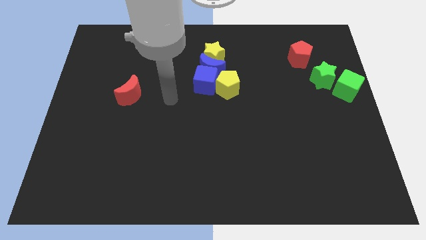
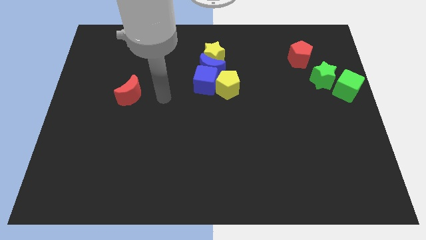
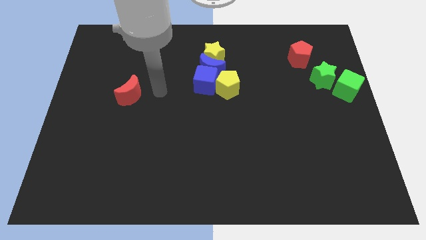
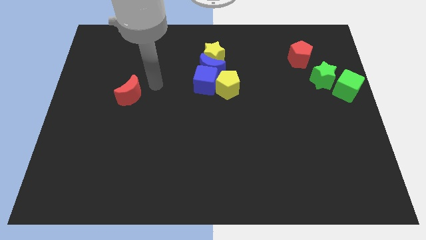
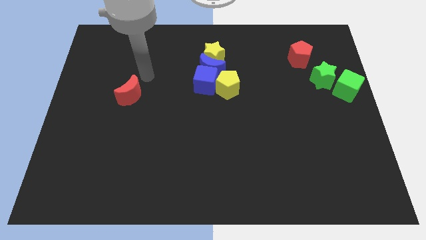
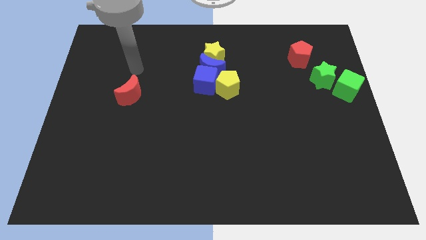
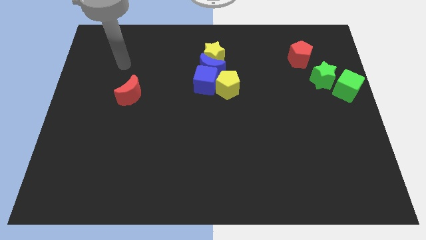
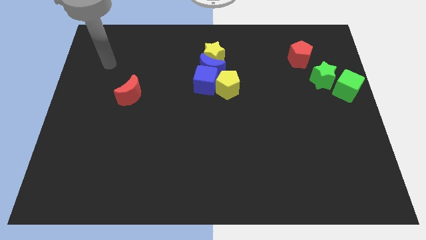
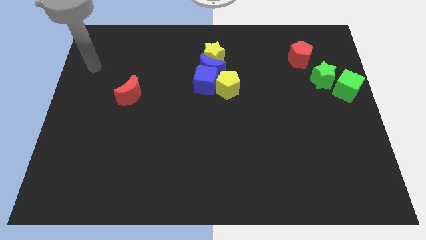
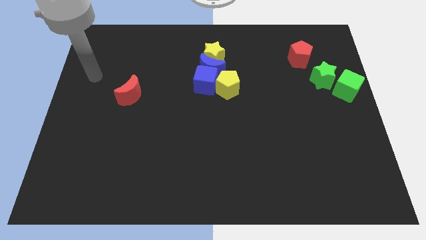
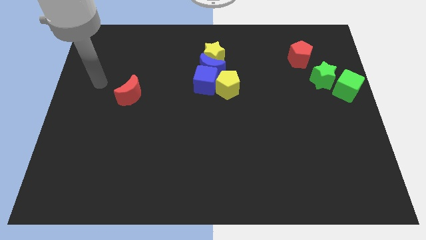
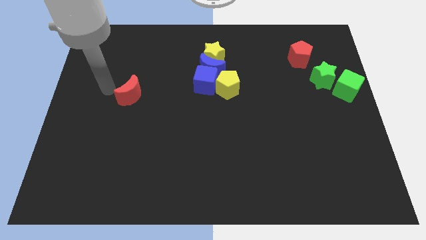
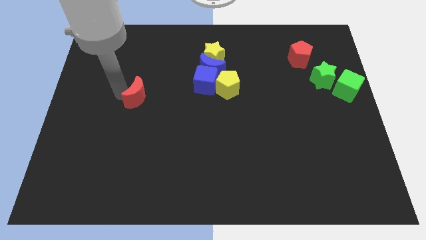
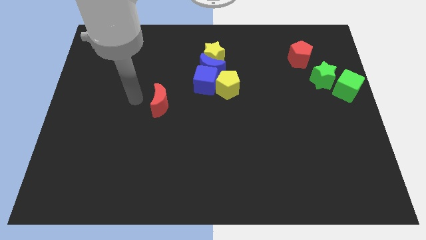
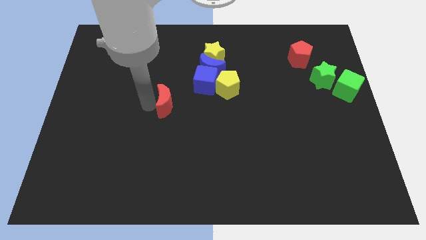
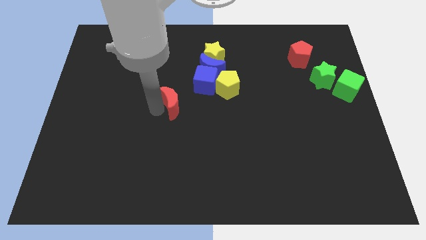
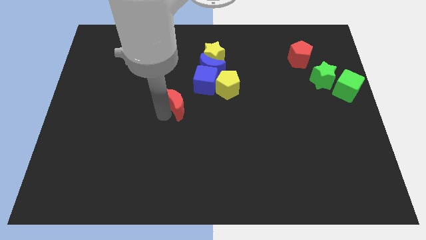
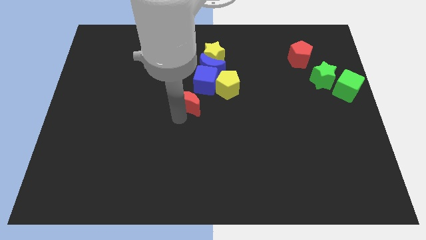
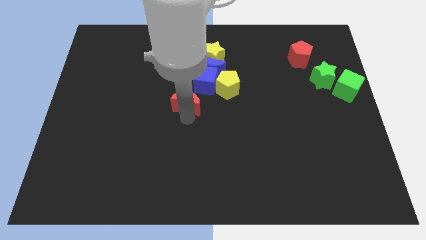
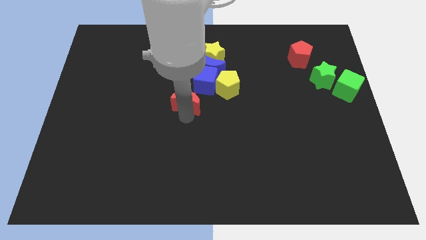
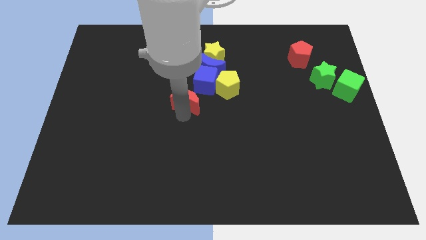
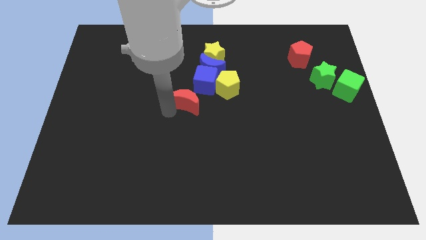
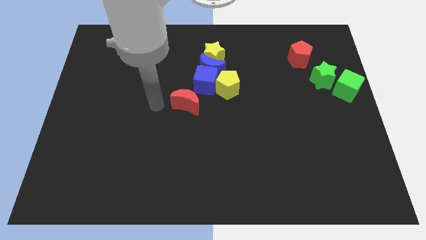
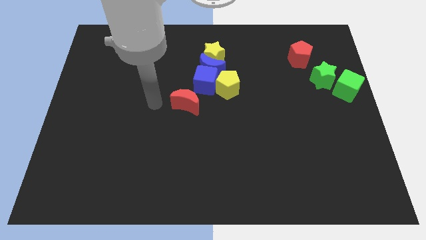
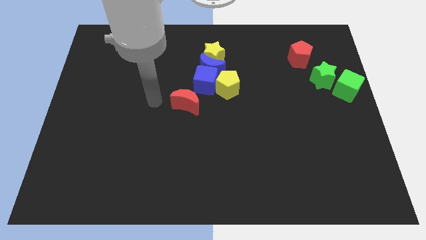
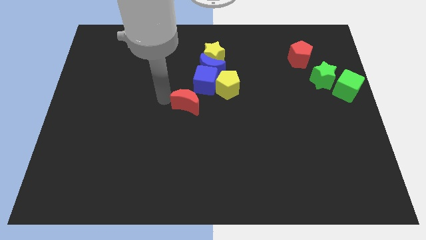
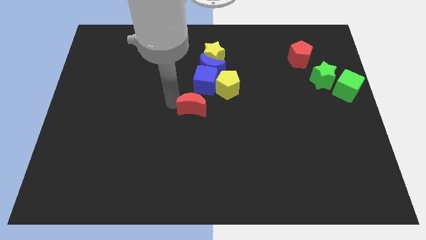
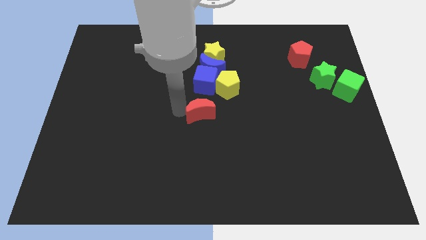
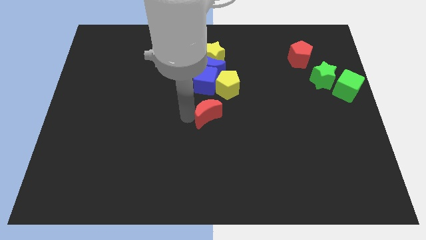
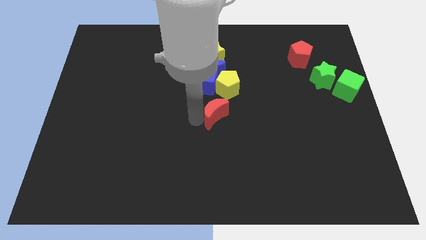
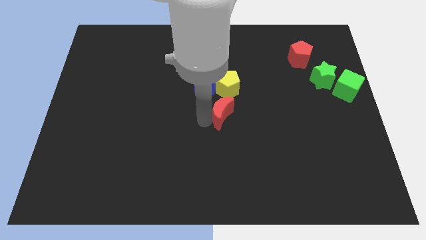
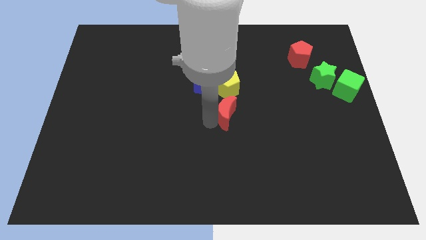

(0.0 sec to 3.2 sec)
place the red crescent below the yellow pentagon

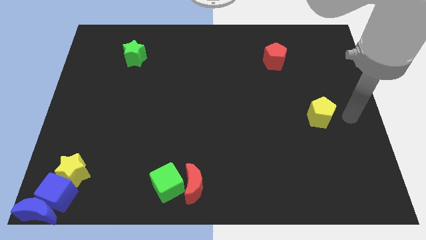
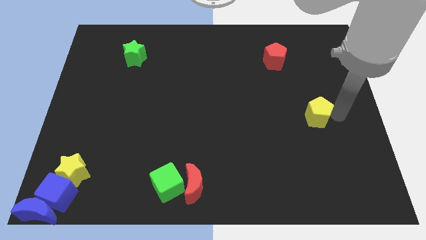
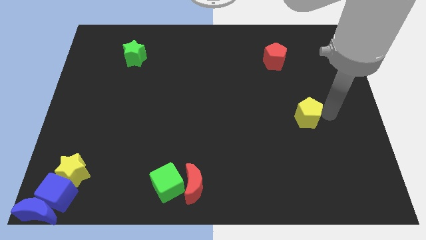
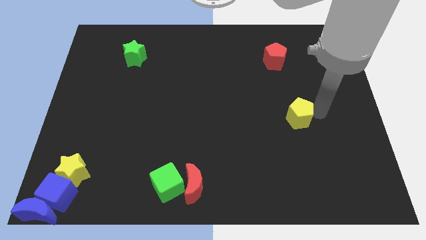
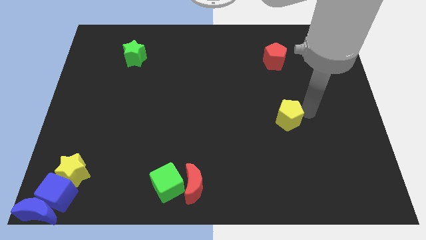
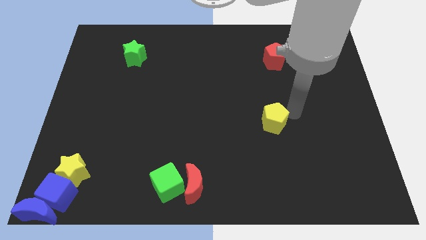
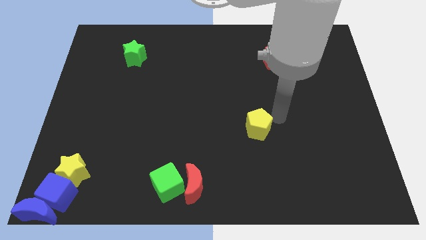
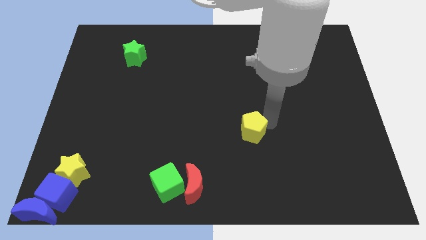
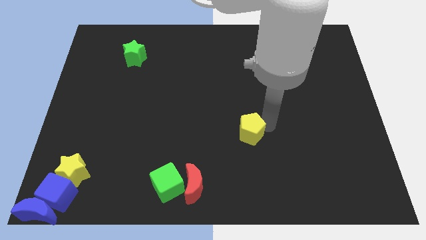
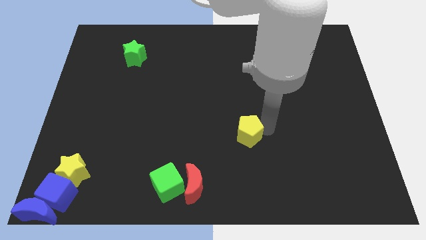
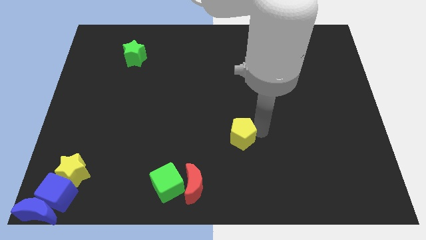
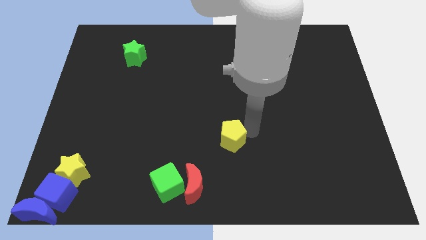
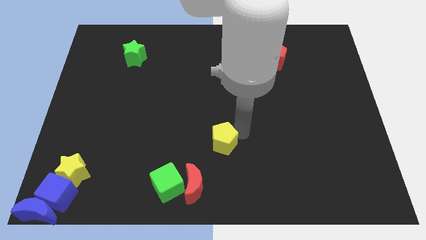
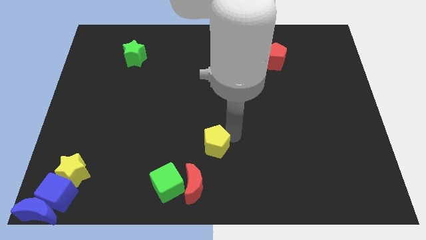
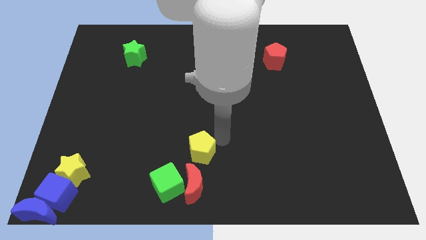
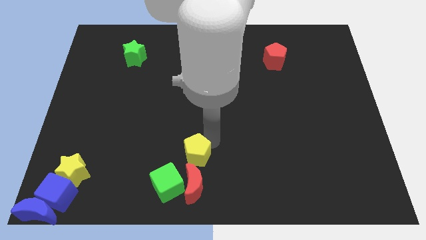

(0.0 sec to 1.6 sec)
place the yellow pentagon above the red moon

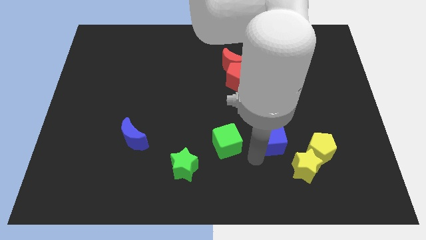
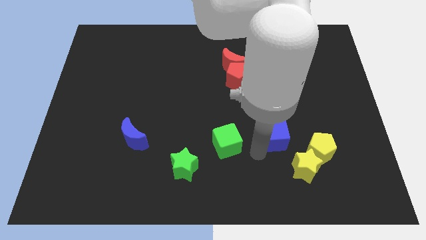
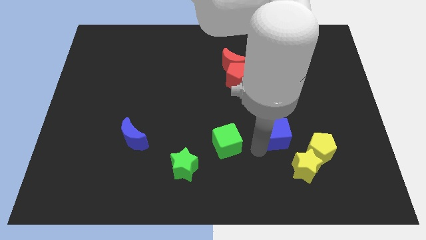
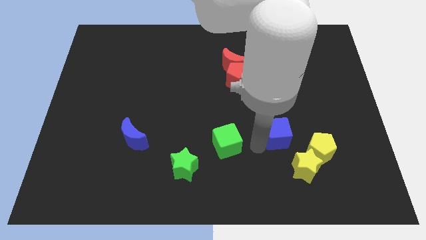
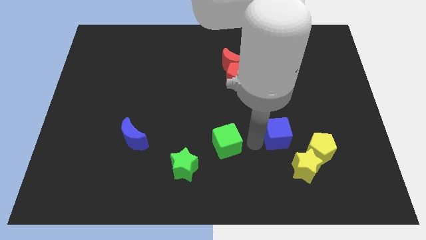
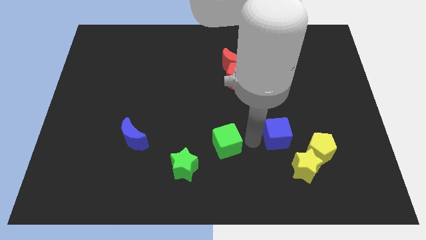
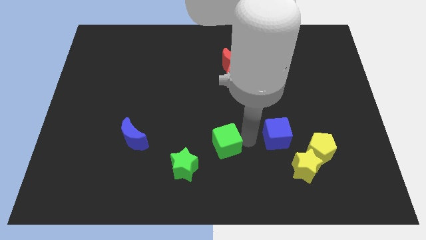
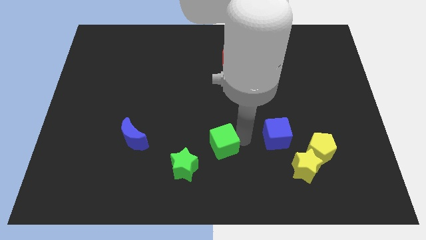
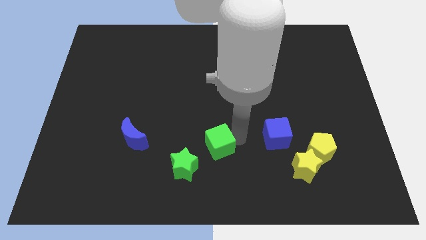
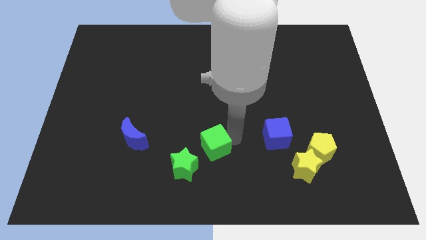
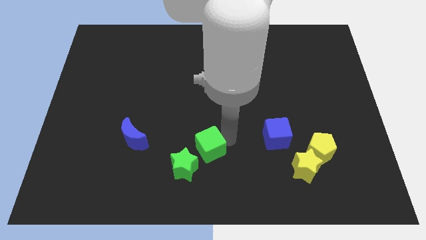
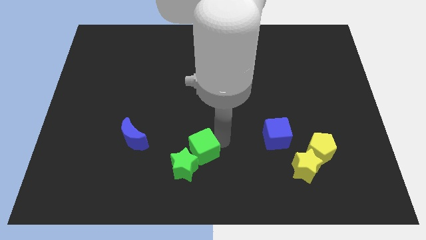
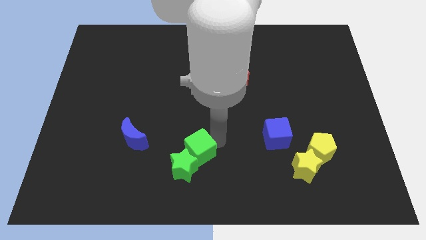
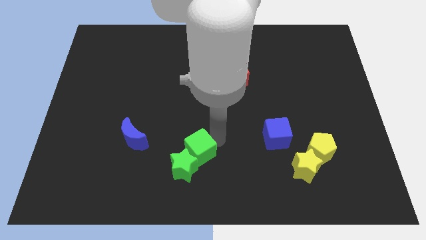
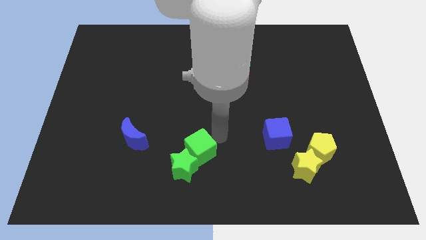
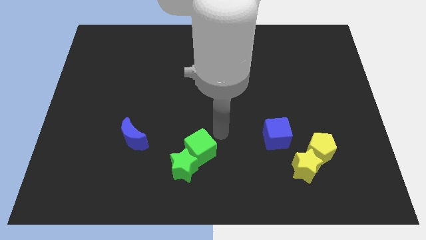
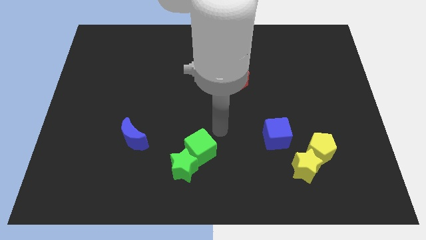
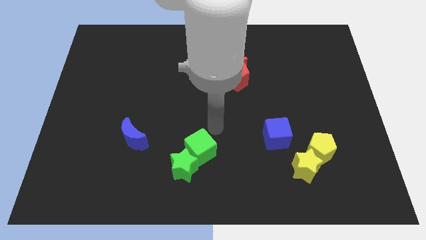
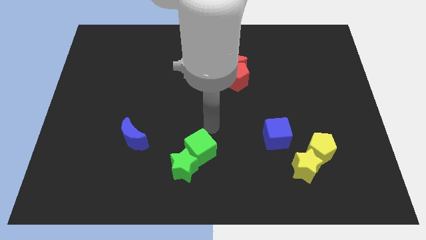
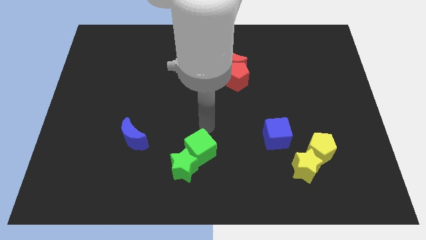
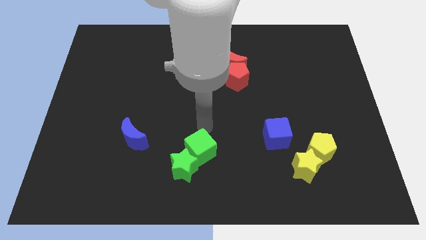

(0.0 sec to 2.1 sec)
push the green cube to the top right side the green star

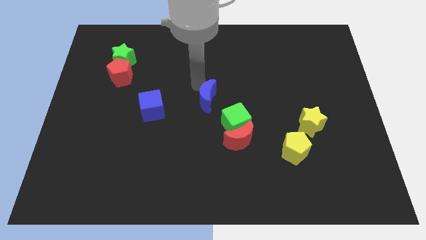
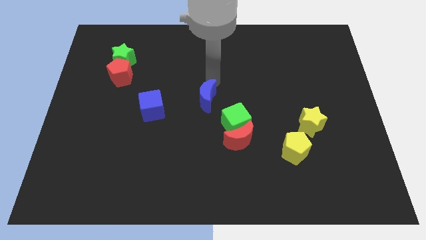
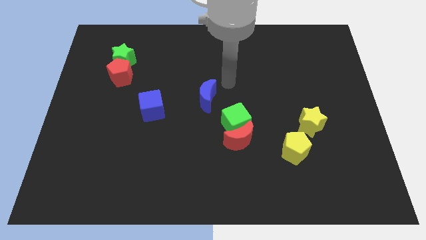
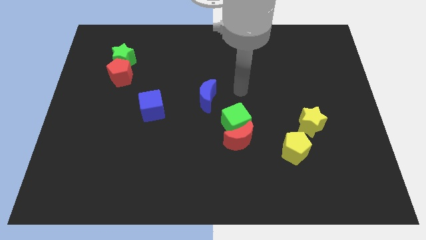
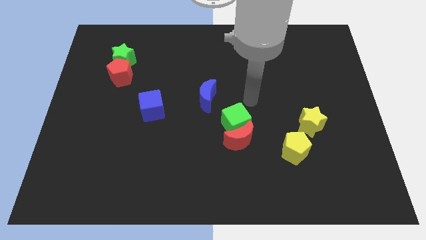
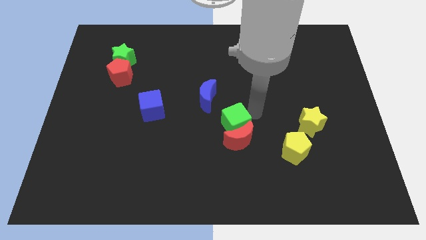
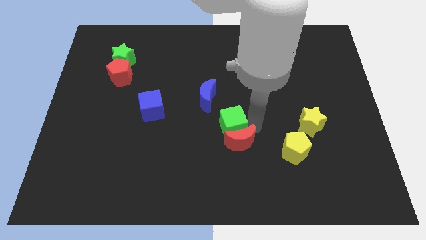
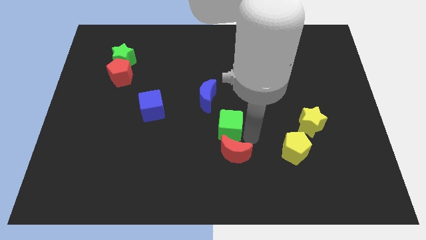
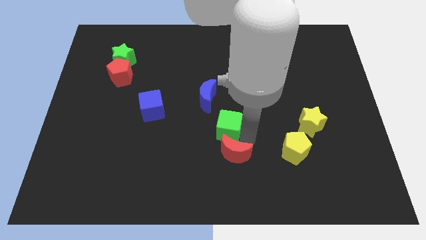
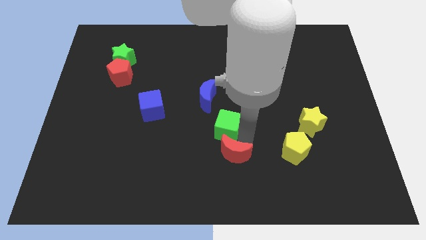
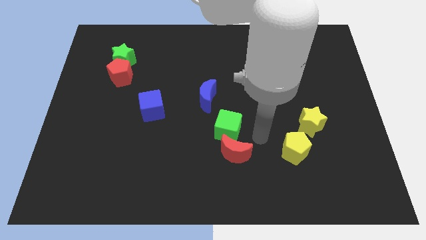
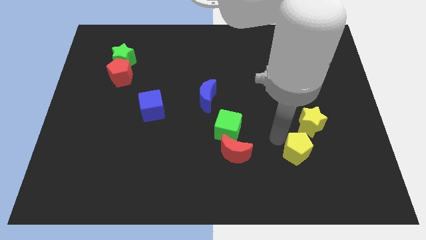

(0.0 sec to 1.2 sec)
push the green cube along with the red crescent slightly to the bottom center of the board

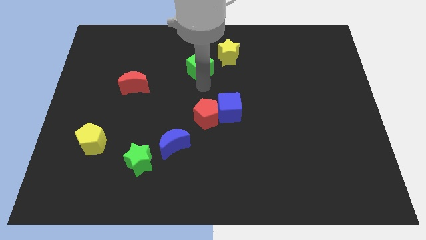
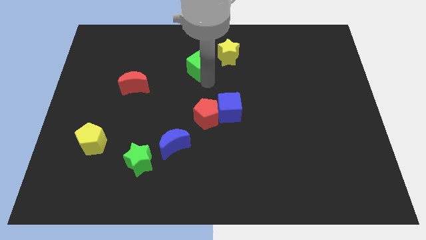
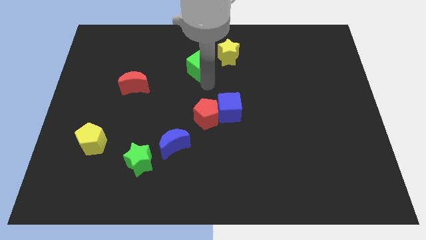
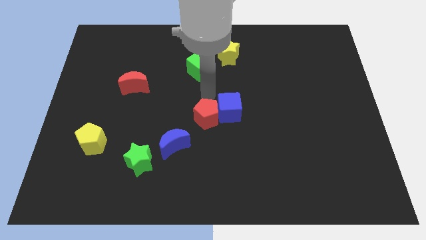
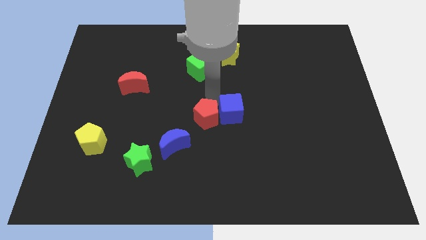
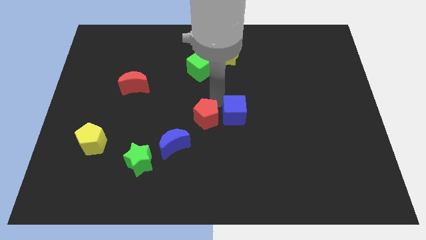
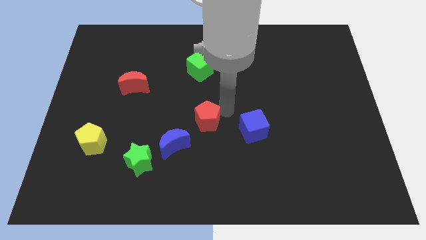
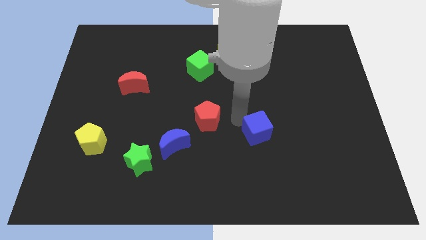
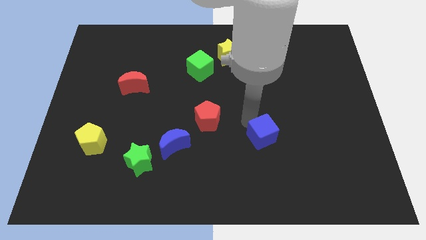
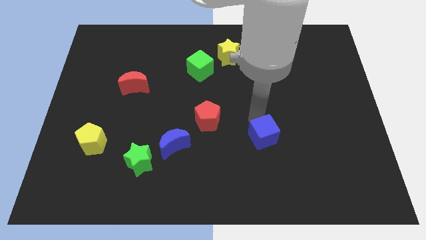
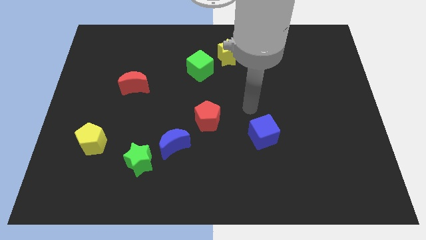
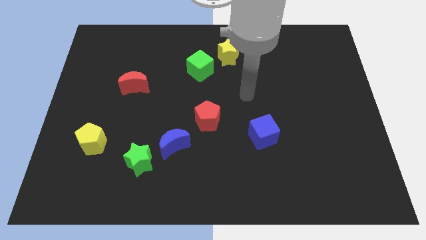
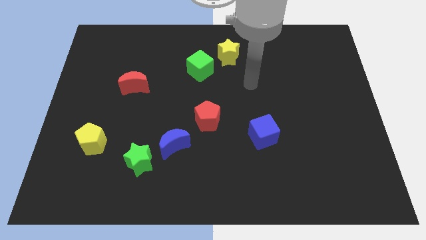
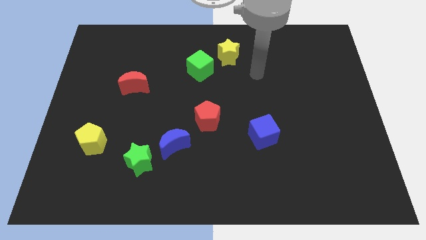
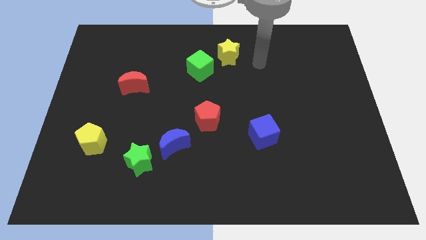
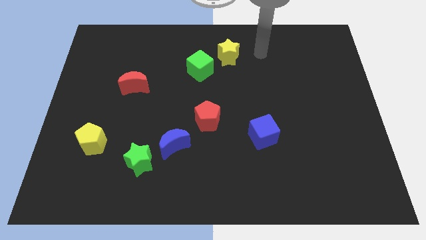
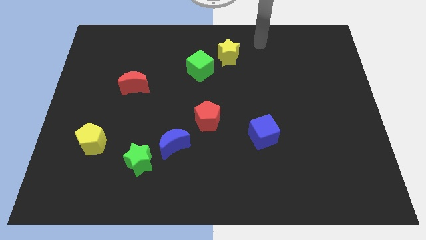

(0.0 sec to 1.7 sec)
push the blue moon to the right of the red pentagon
